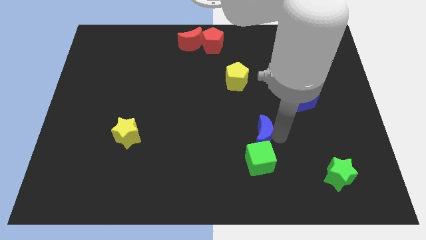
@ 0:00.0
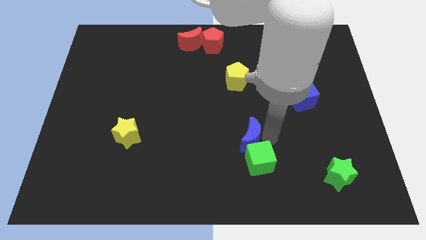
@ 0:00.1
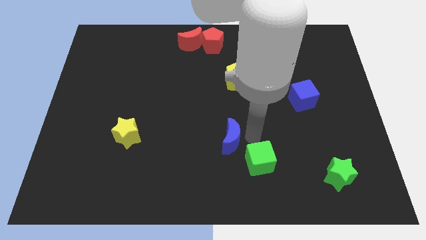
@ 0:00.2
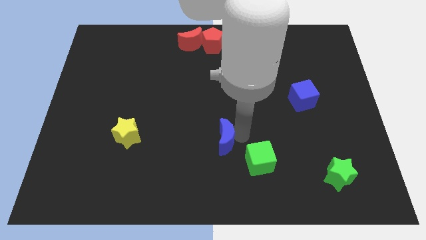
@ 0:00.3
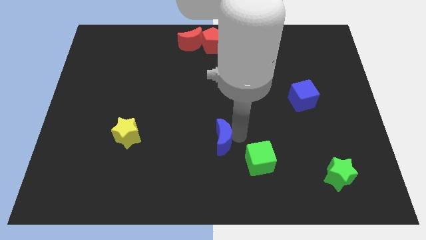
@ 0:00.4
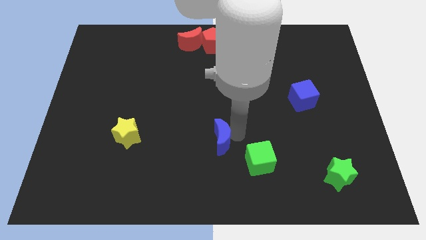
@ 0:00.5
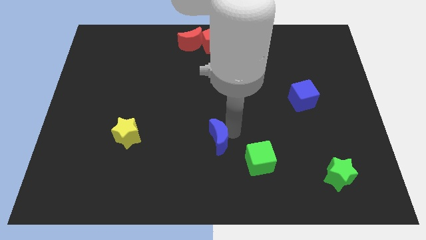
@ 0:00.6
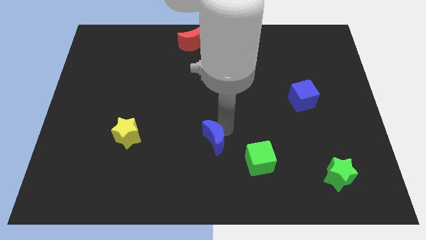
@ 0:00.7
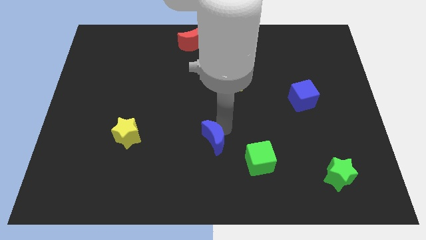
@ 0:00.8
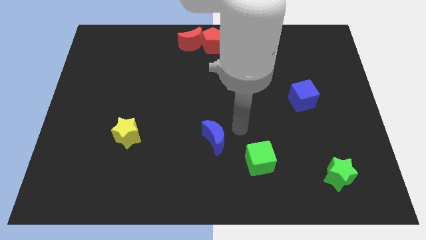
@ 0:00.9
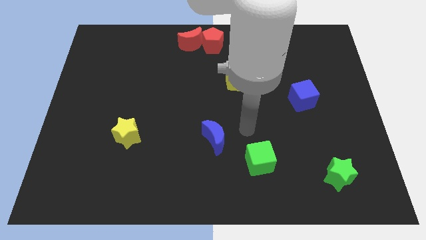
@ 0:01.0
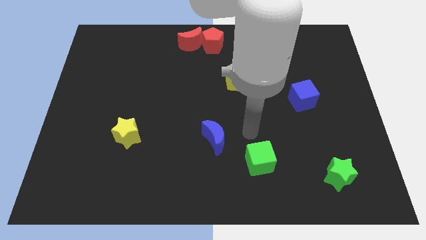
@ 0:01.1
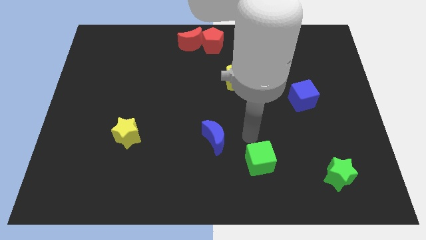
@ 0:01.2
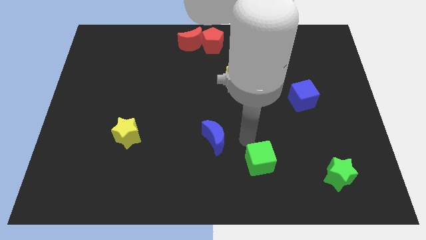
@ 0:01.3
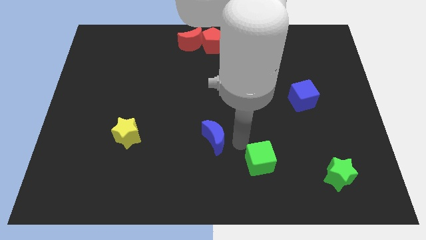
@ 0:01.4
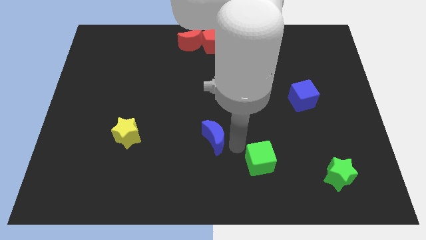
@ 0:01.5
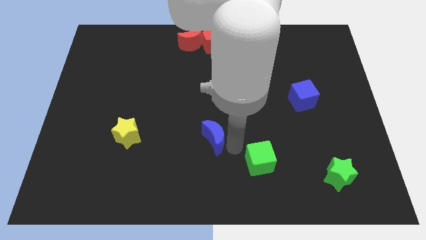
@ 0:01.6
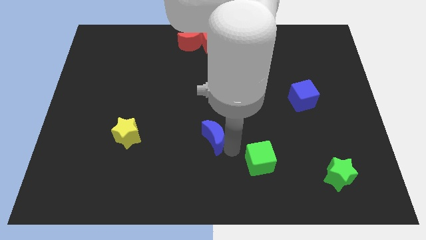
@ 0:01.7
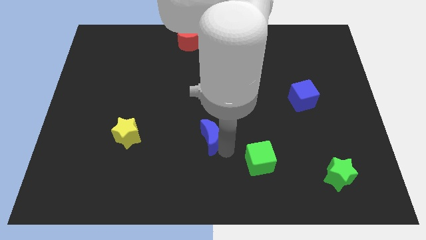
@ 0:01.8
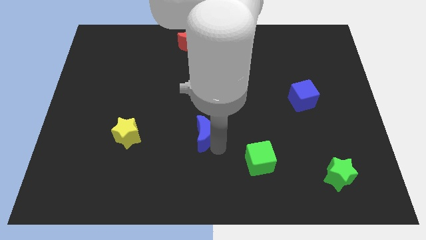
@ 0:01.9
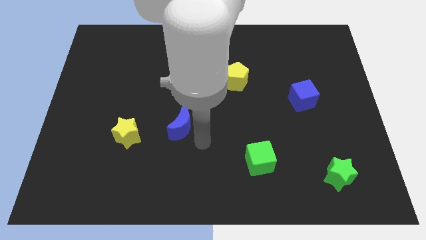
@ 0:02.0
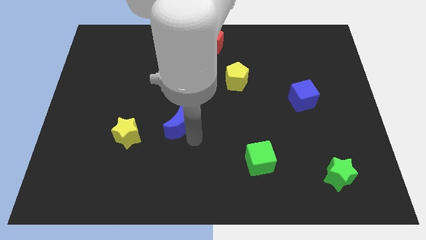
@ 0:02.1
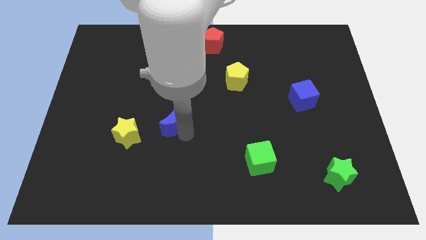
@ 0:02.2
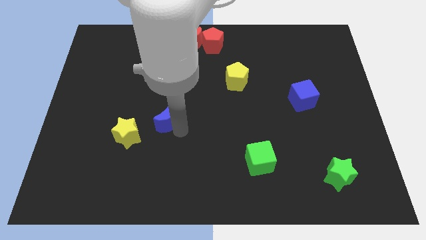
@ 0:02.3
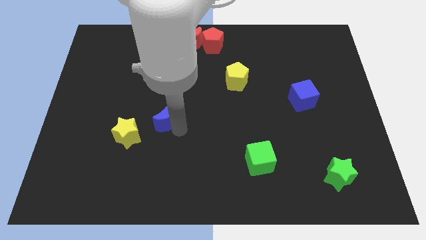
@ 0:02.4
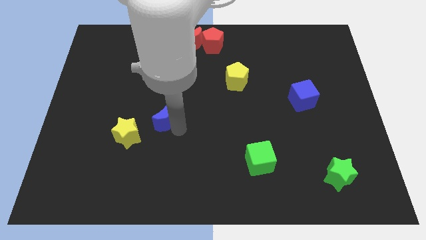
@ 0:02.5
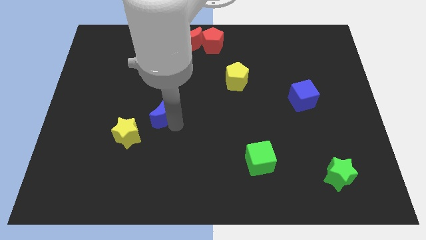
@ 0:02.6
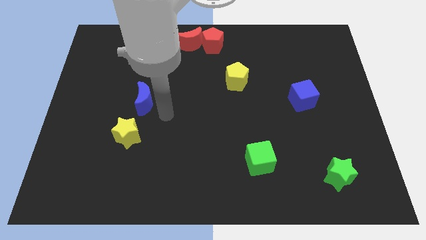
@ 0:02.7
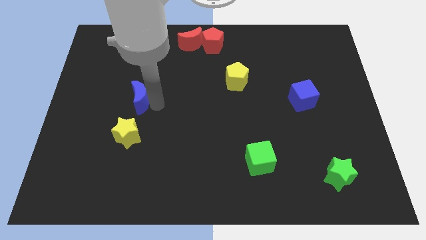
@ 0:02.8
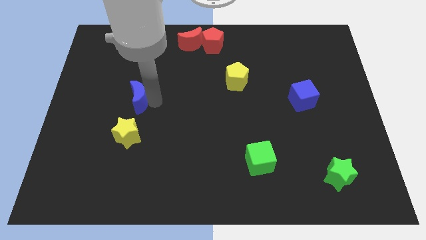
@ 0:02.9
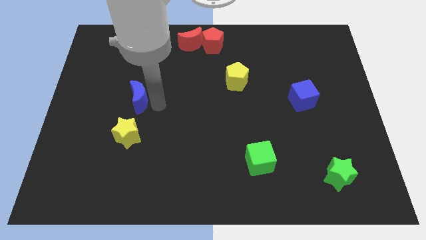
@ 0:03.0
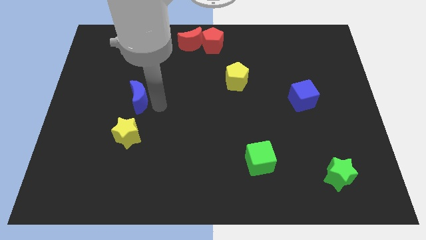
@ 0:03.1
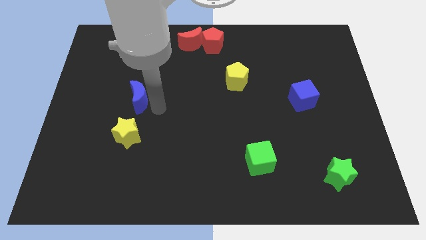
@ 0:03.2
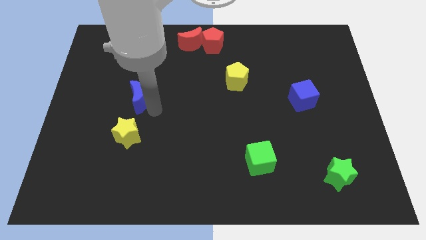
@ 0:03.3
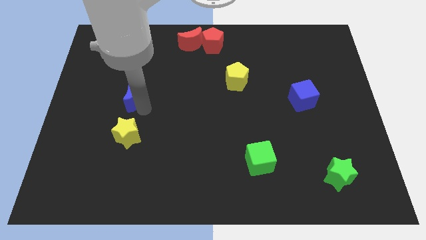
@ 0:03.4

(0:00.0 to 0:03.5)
slide the blue moon to the top side of the yellow star

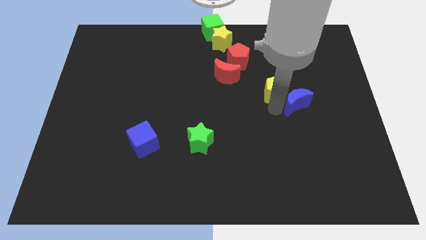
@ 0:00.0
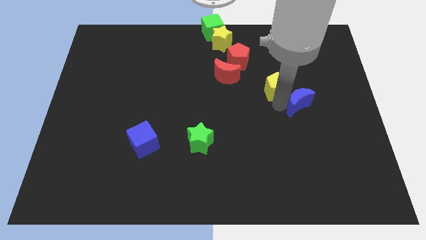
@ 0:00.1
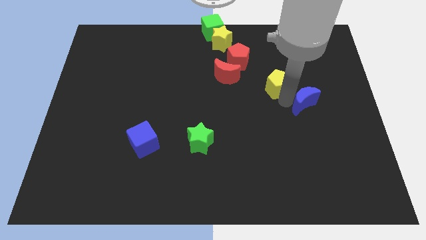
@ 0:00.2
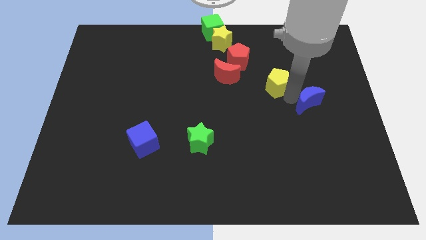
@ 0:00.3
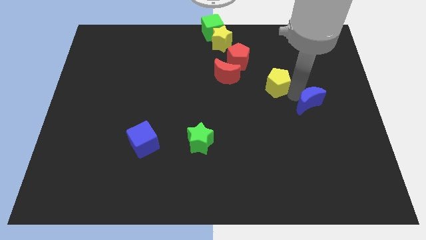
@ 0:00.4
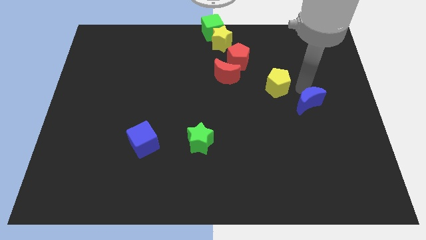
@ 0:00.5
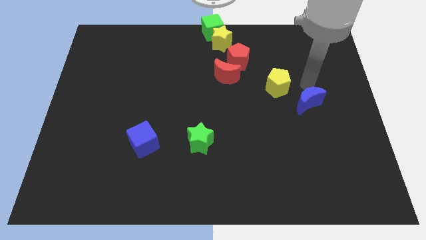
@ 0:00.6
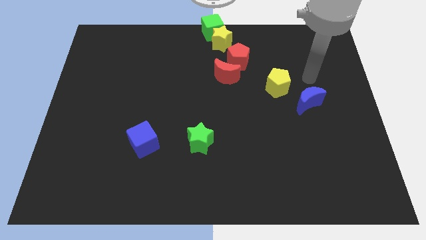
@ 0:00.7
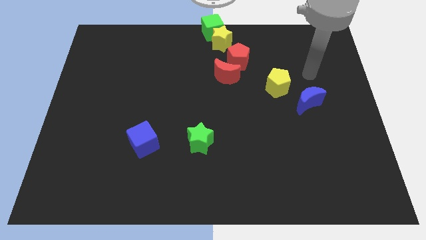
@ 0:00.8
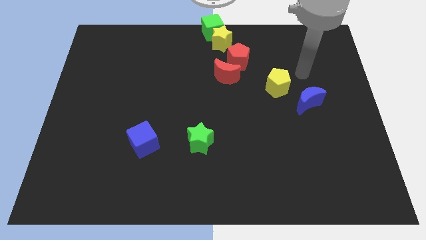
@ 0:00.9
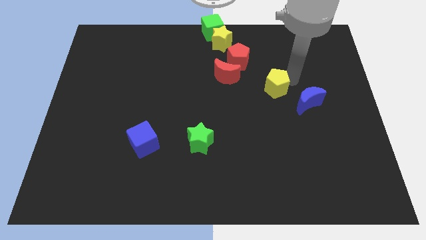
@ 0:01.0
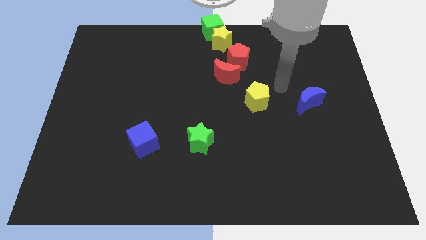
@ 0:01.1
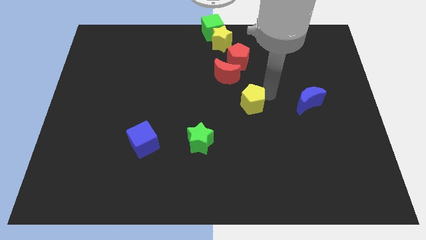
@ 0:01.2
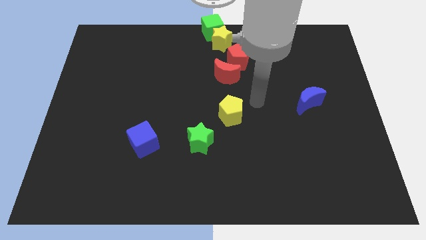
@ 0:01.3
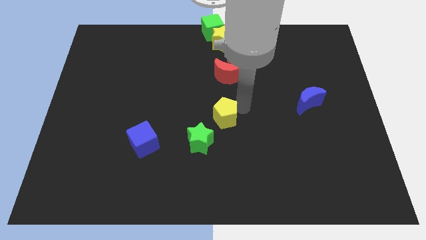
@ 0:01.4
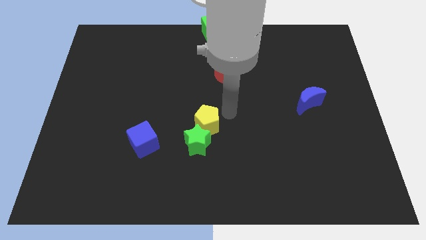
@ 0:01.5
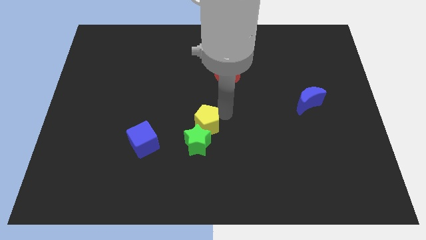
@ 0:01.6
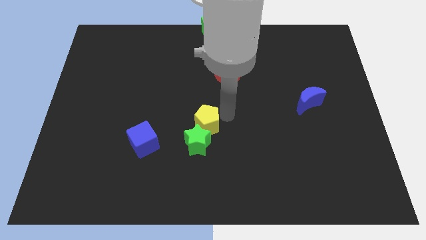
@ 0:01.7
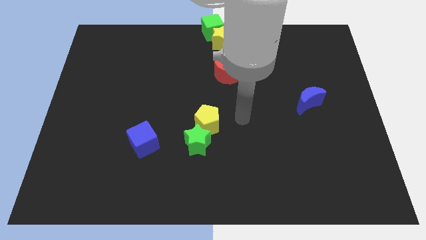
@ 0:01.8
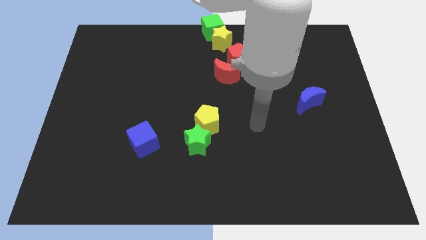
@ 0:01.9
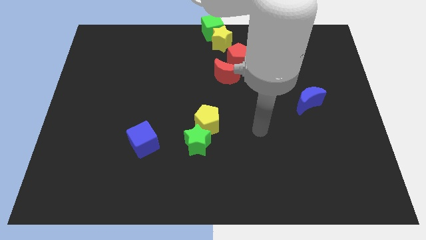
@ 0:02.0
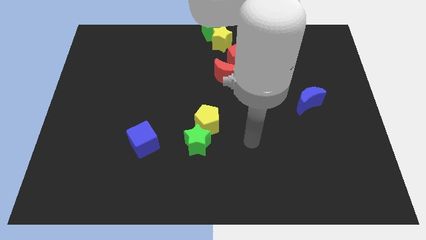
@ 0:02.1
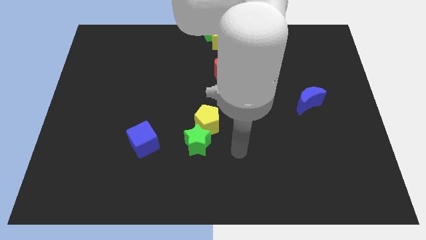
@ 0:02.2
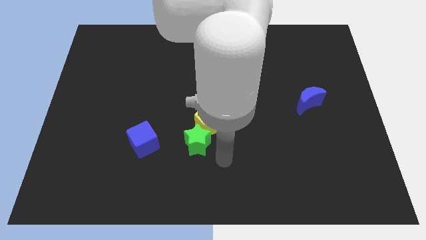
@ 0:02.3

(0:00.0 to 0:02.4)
move the yellow star to the top right of the green star

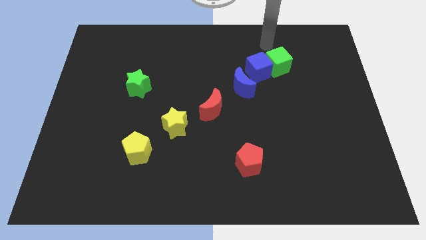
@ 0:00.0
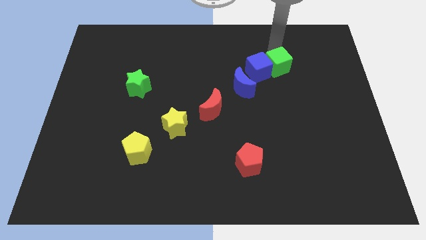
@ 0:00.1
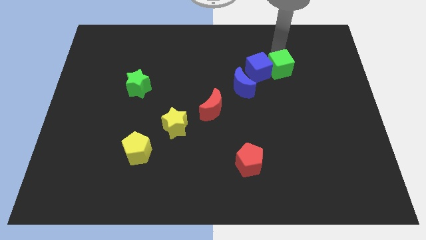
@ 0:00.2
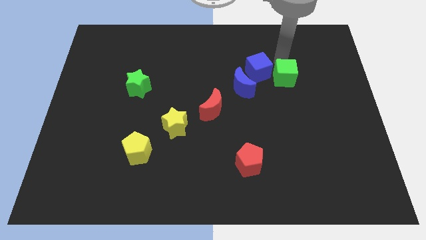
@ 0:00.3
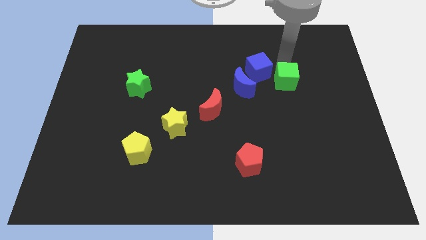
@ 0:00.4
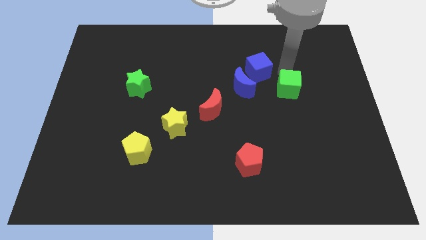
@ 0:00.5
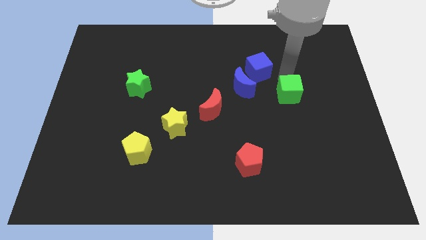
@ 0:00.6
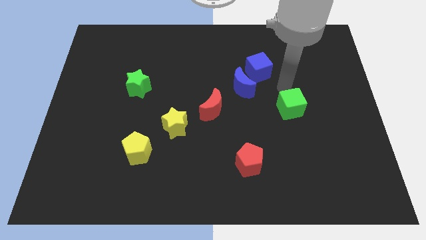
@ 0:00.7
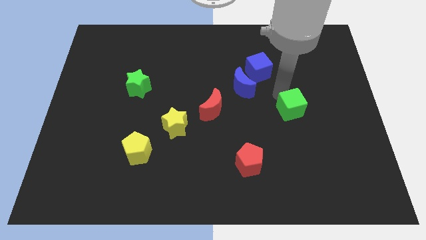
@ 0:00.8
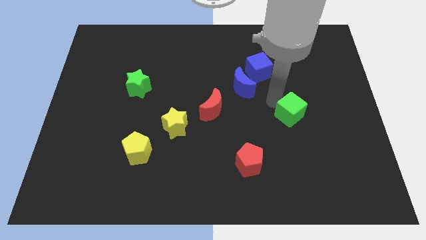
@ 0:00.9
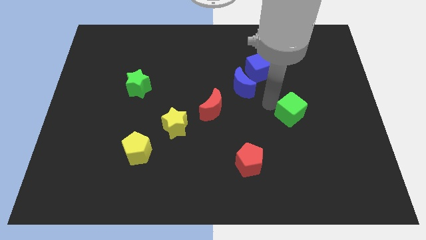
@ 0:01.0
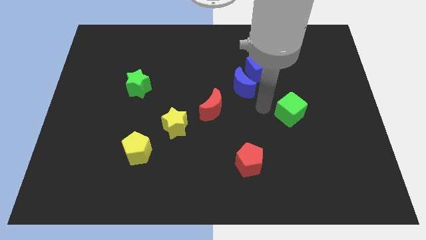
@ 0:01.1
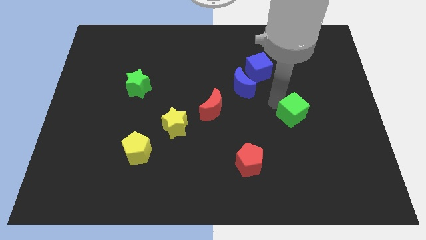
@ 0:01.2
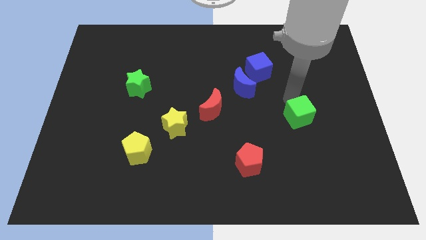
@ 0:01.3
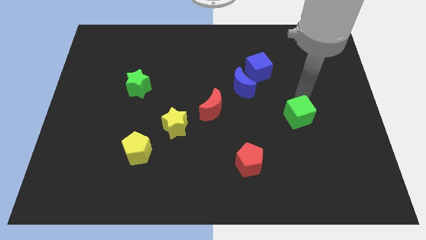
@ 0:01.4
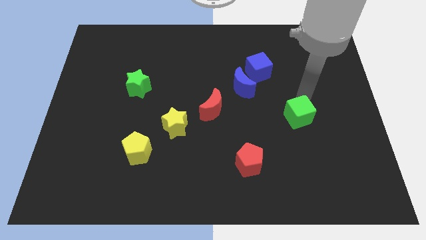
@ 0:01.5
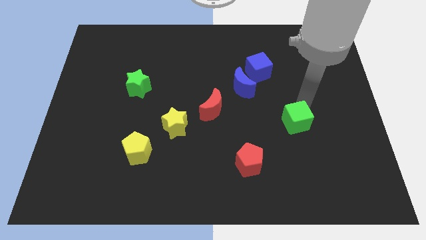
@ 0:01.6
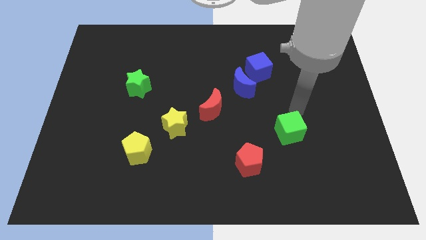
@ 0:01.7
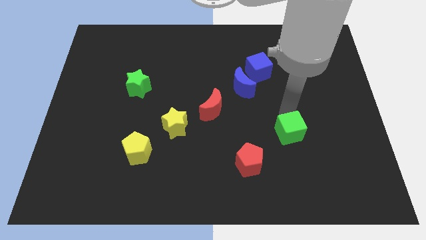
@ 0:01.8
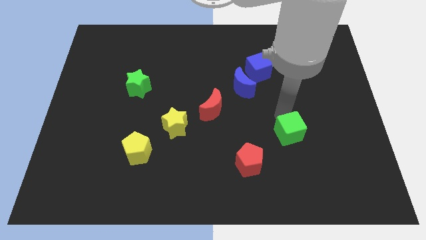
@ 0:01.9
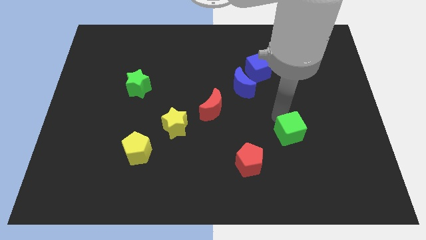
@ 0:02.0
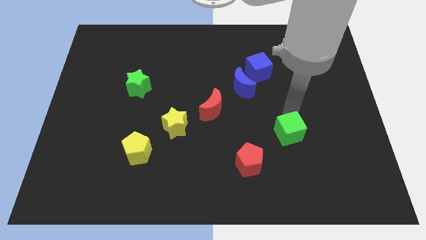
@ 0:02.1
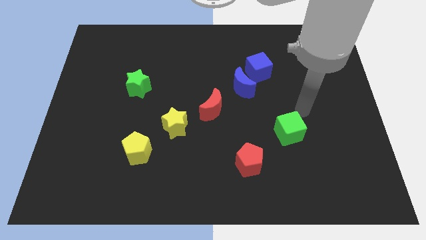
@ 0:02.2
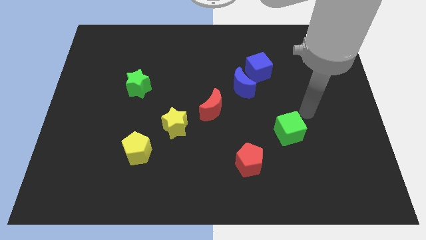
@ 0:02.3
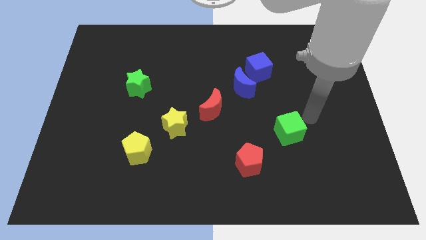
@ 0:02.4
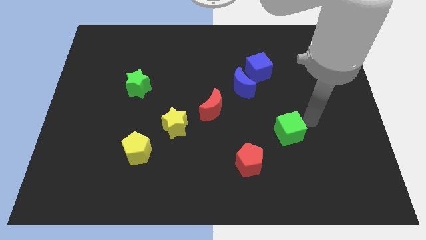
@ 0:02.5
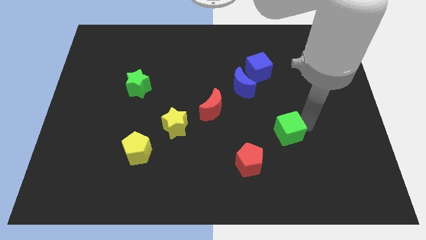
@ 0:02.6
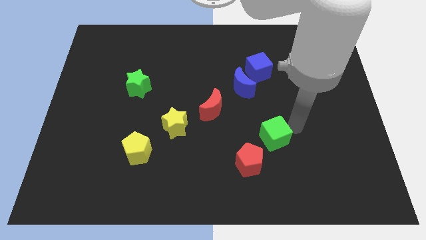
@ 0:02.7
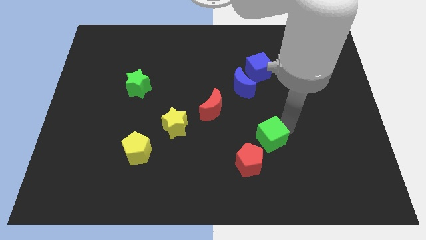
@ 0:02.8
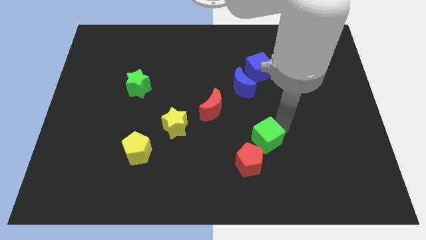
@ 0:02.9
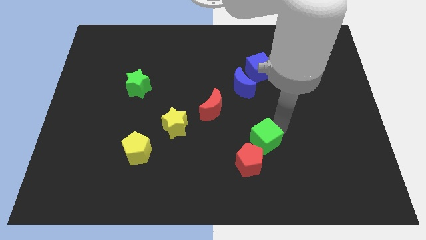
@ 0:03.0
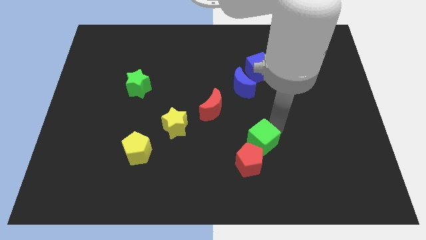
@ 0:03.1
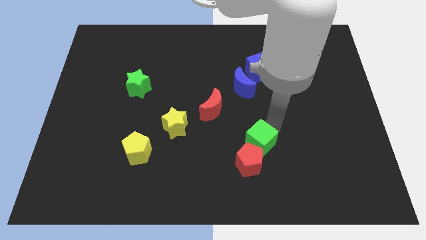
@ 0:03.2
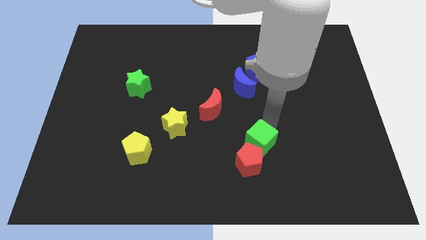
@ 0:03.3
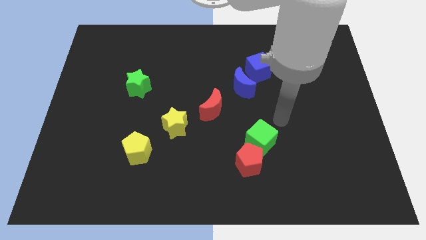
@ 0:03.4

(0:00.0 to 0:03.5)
place a green cube on the red pentagon
